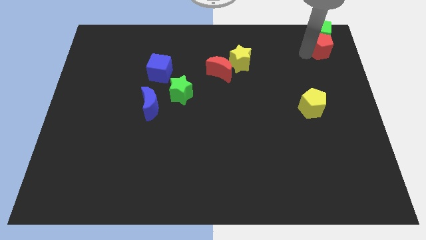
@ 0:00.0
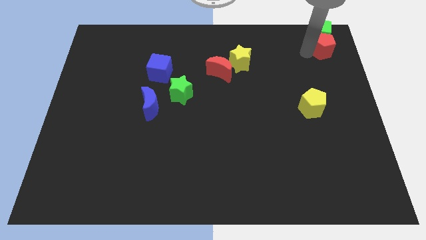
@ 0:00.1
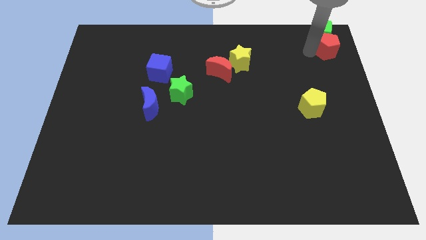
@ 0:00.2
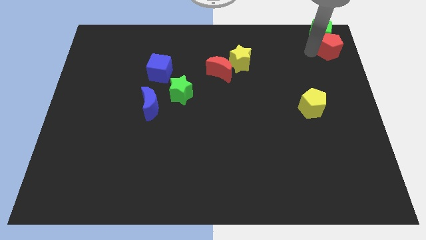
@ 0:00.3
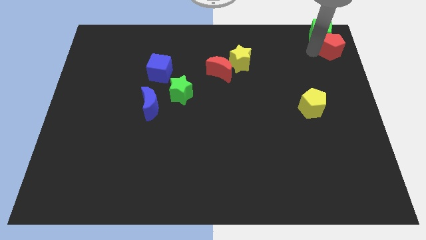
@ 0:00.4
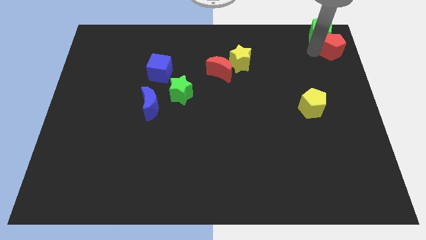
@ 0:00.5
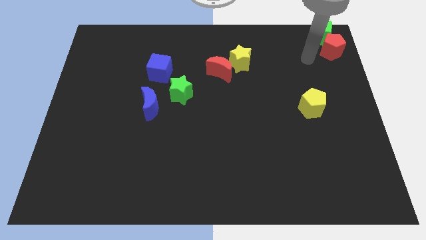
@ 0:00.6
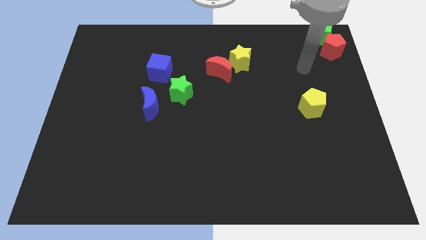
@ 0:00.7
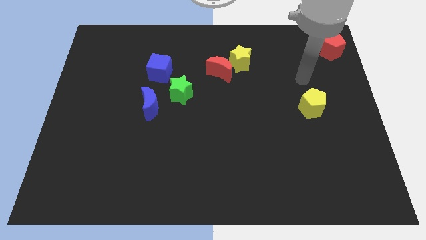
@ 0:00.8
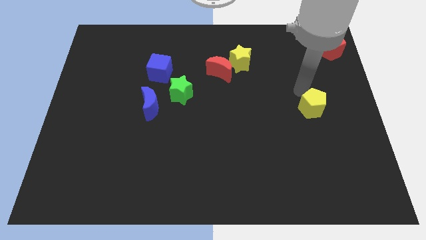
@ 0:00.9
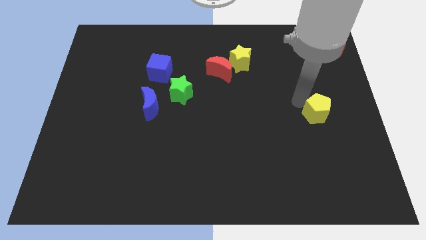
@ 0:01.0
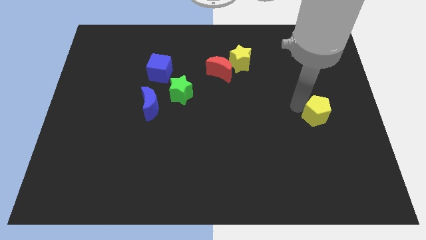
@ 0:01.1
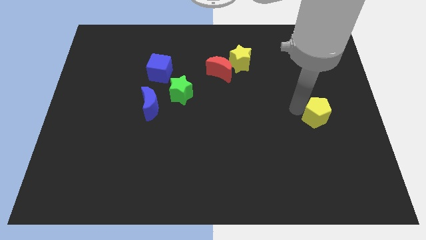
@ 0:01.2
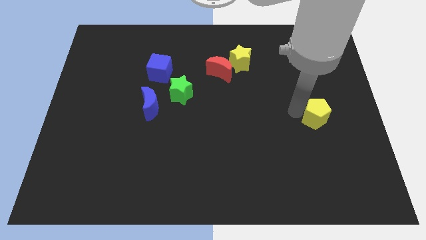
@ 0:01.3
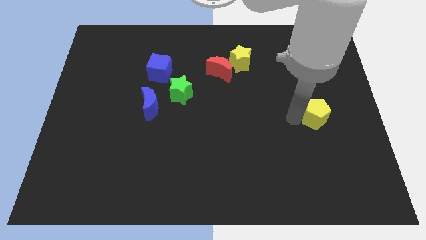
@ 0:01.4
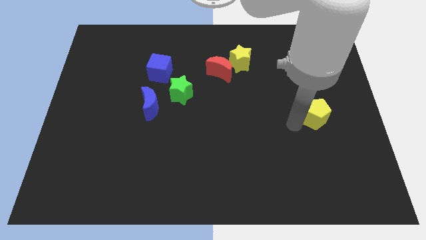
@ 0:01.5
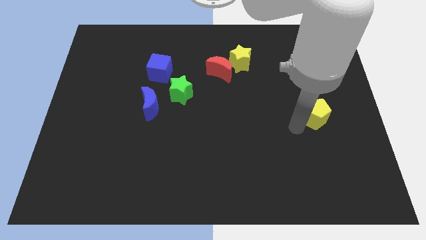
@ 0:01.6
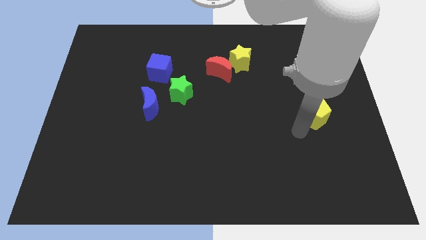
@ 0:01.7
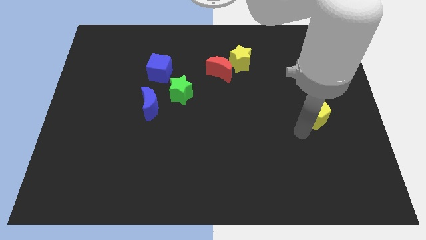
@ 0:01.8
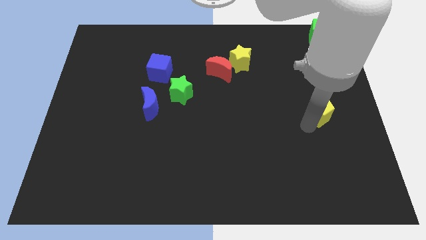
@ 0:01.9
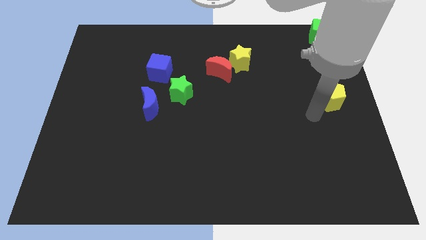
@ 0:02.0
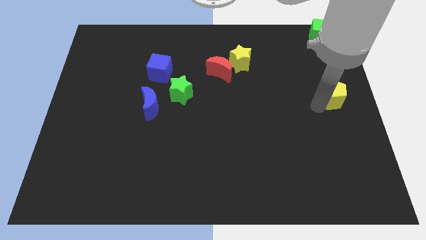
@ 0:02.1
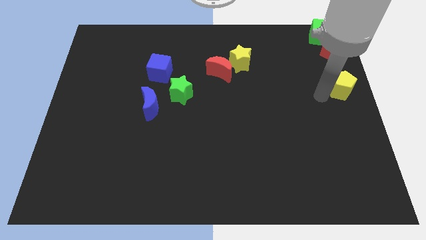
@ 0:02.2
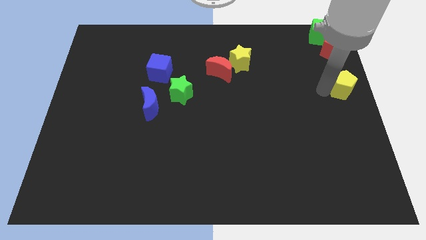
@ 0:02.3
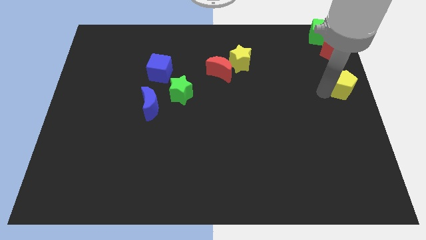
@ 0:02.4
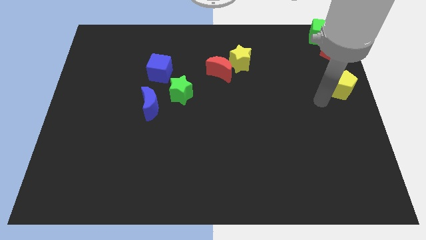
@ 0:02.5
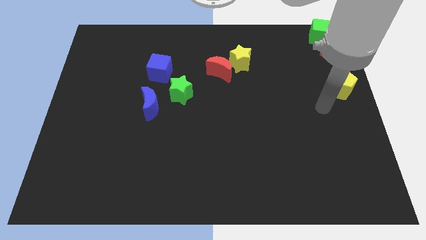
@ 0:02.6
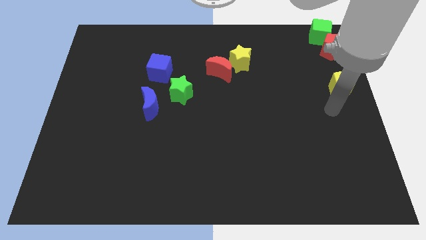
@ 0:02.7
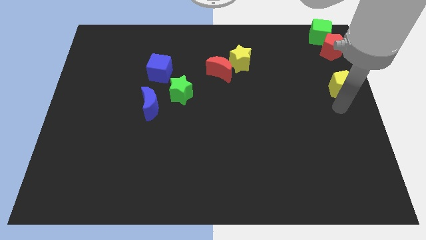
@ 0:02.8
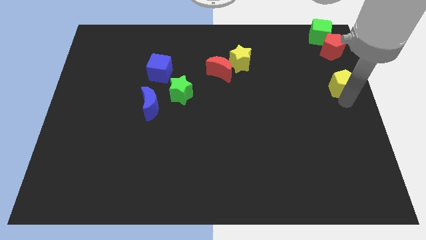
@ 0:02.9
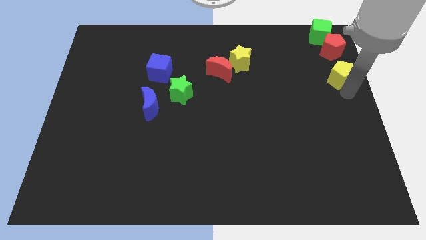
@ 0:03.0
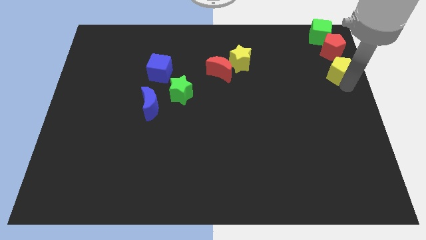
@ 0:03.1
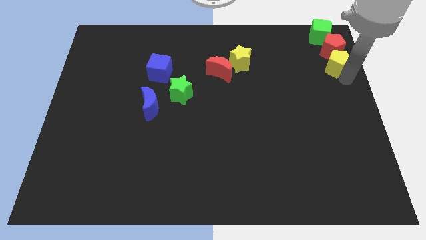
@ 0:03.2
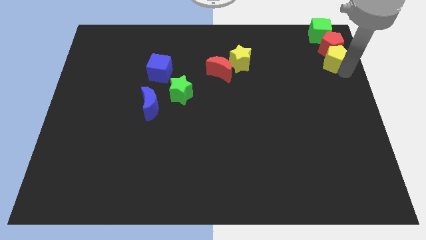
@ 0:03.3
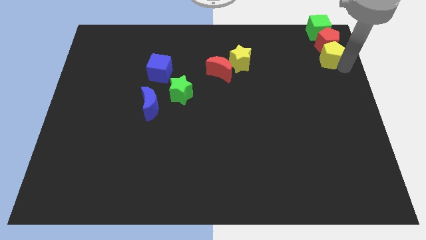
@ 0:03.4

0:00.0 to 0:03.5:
push yellow pentagon below red pentagon

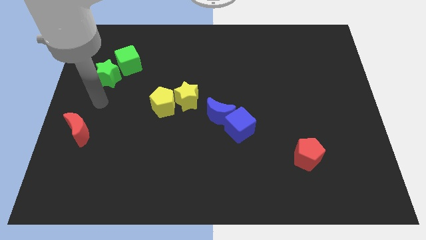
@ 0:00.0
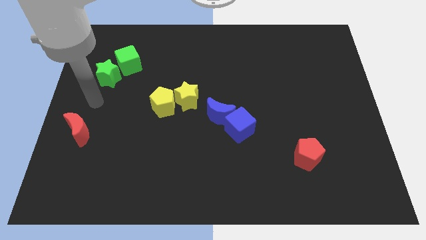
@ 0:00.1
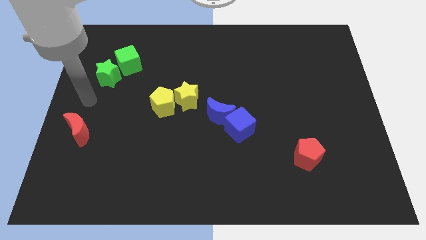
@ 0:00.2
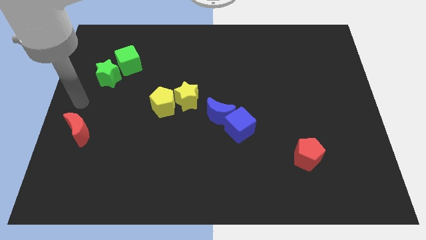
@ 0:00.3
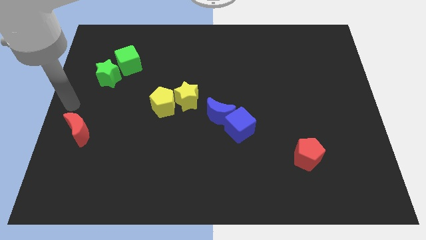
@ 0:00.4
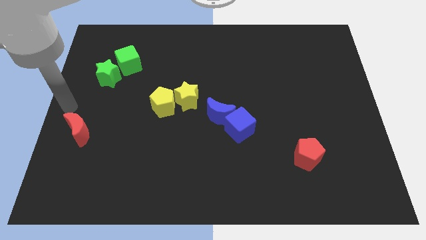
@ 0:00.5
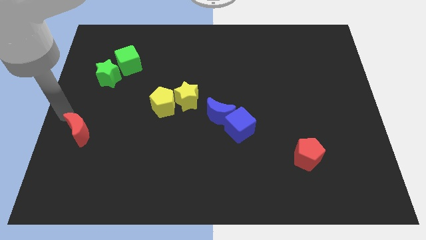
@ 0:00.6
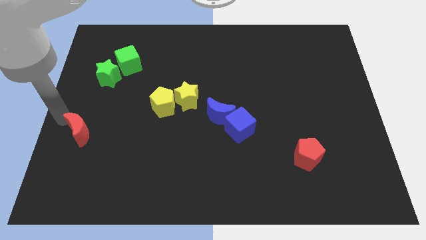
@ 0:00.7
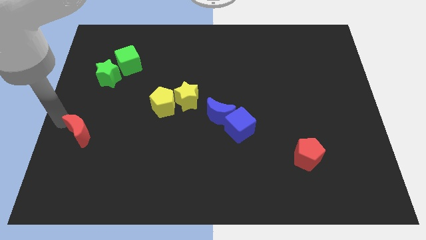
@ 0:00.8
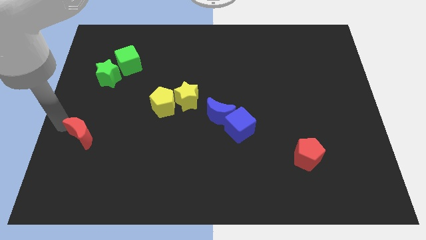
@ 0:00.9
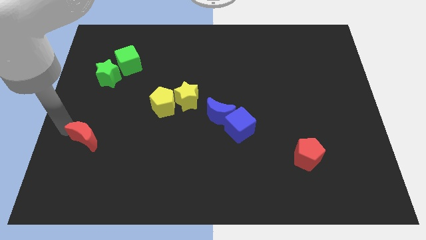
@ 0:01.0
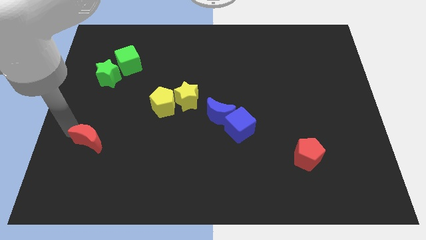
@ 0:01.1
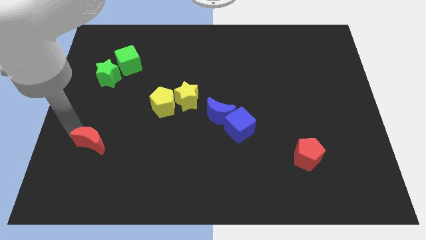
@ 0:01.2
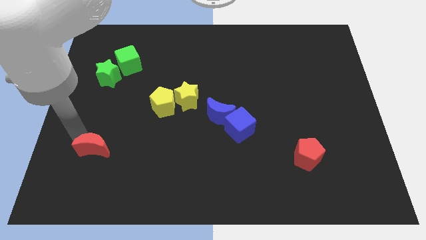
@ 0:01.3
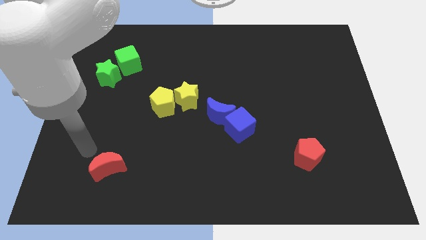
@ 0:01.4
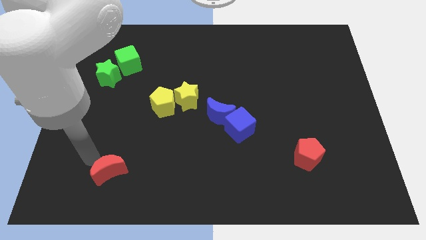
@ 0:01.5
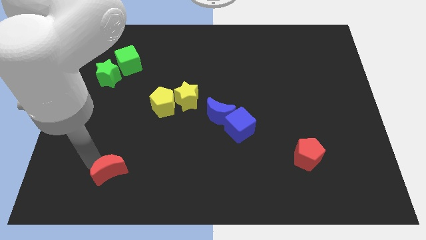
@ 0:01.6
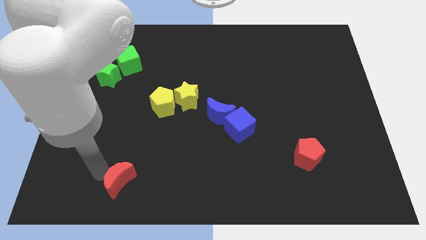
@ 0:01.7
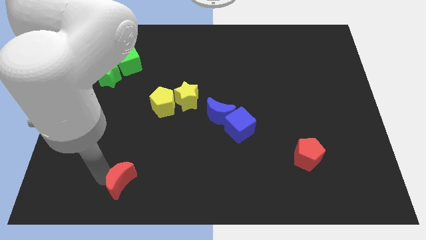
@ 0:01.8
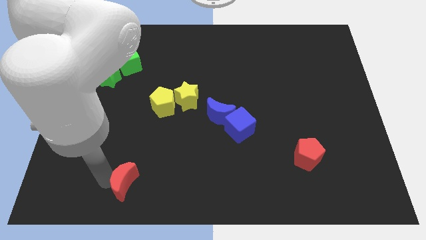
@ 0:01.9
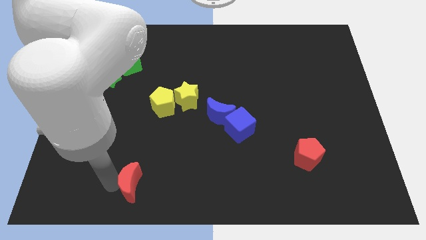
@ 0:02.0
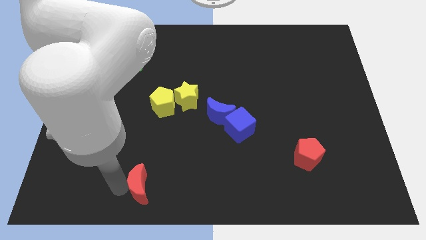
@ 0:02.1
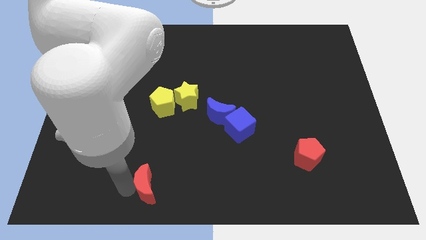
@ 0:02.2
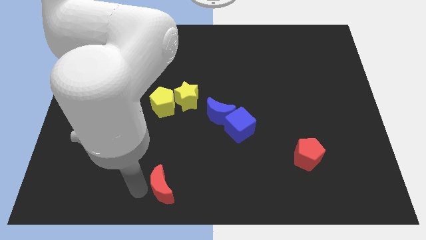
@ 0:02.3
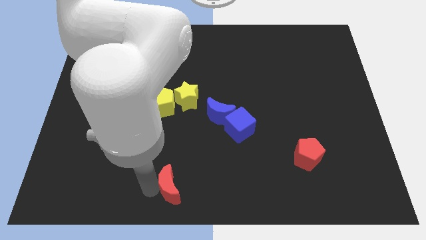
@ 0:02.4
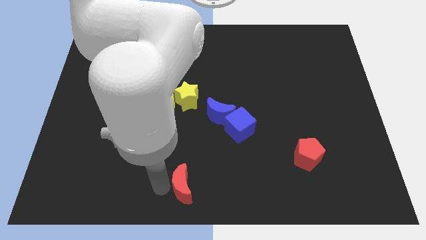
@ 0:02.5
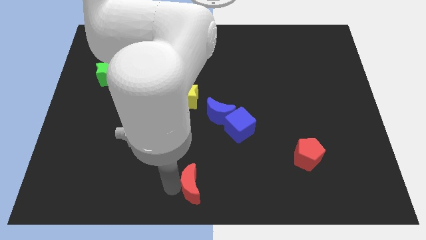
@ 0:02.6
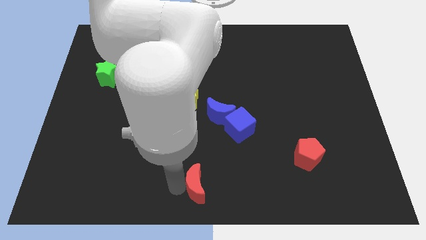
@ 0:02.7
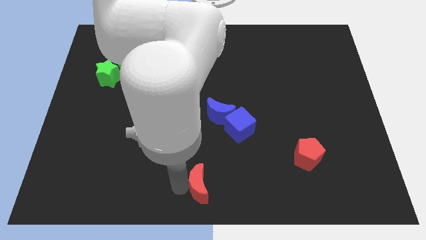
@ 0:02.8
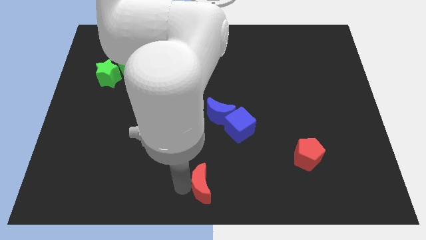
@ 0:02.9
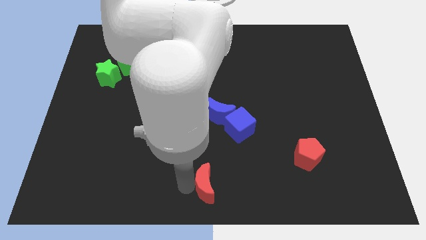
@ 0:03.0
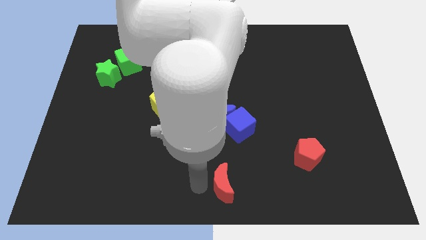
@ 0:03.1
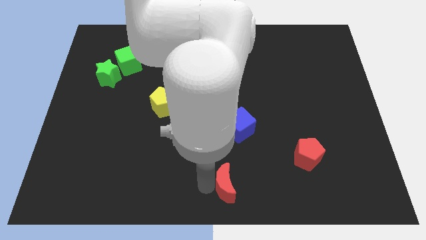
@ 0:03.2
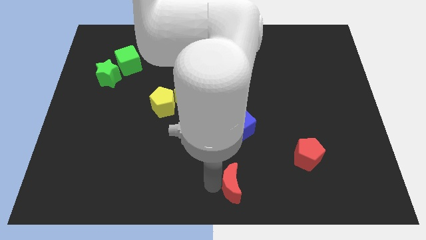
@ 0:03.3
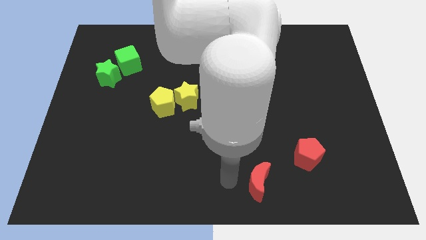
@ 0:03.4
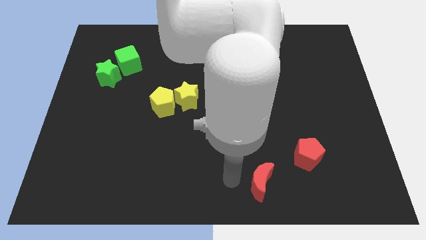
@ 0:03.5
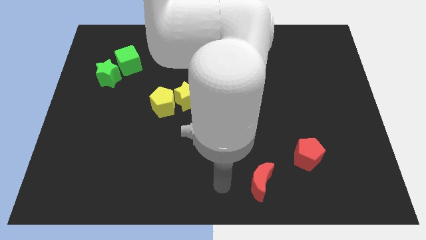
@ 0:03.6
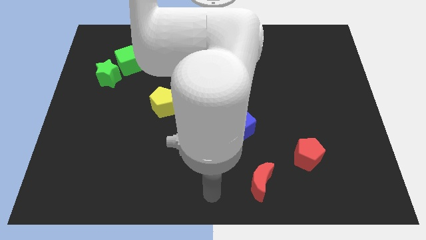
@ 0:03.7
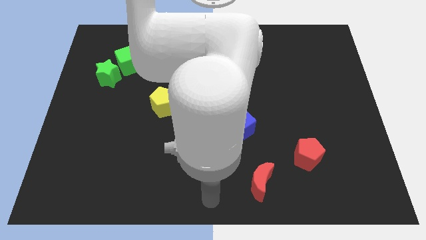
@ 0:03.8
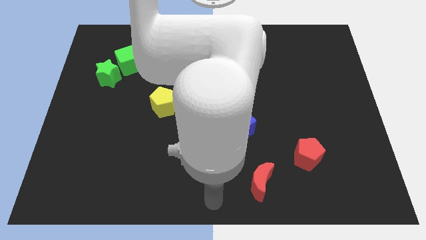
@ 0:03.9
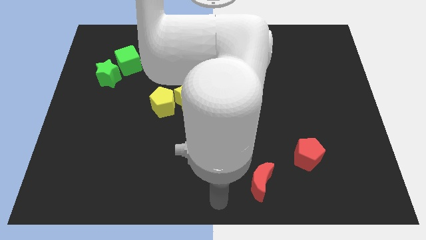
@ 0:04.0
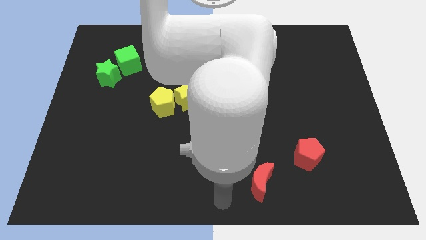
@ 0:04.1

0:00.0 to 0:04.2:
slide red moon to the bottom left of red pentagon

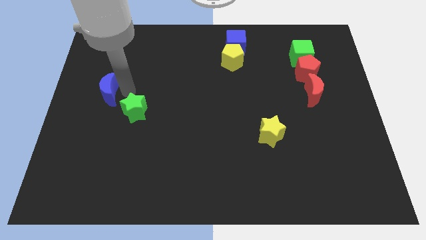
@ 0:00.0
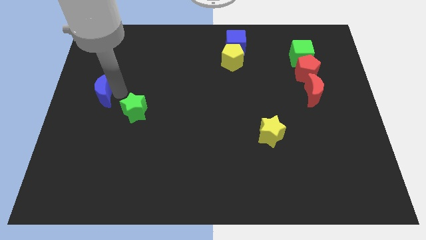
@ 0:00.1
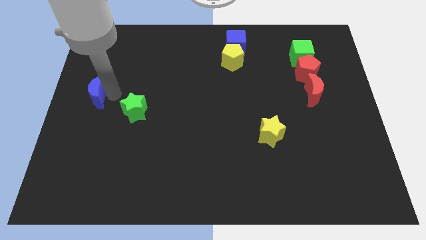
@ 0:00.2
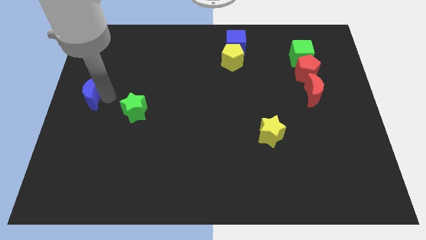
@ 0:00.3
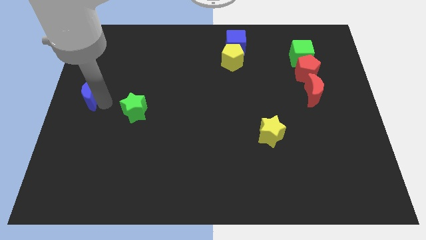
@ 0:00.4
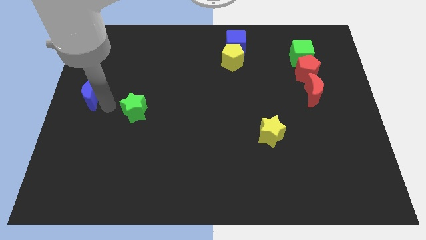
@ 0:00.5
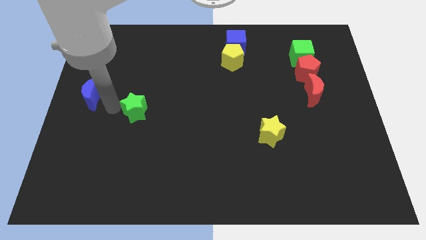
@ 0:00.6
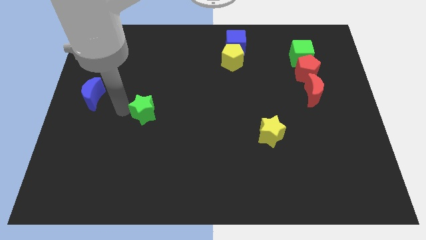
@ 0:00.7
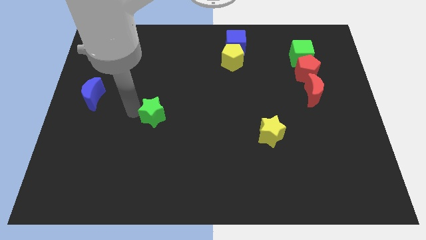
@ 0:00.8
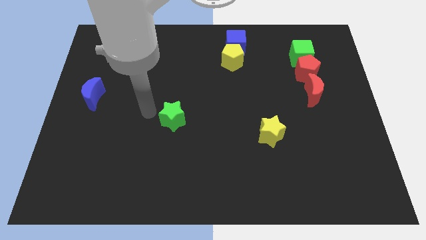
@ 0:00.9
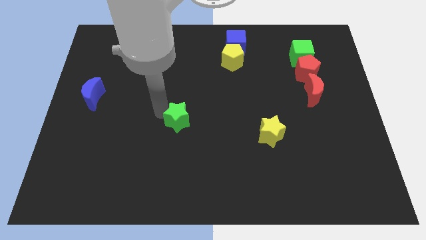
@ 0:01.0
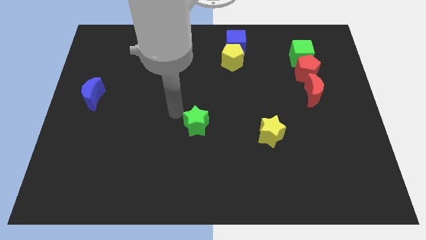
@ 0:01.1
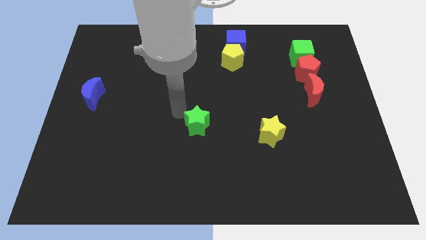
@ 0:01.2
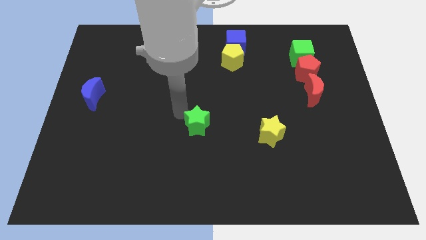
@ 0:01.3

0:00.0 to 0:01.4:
move green star to the middle of the board
